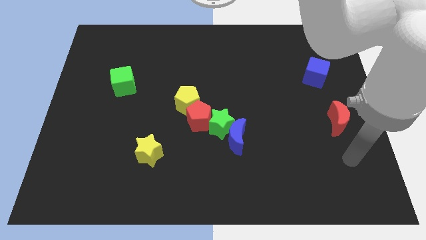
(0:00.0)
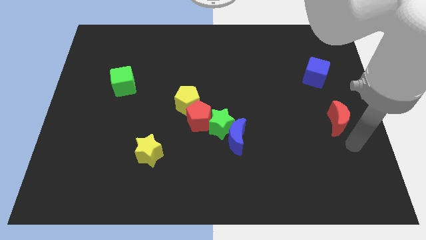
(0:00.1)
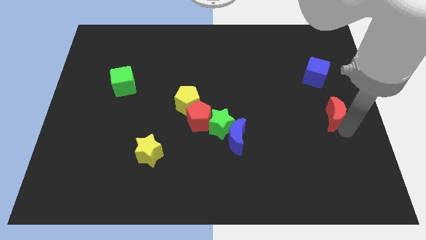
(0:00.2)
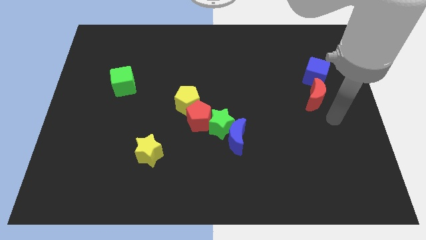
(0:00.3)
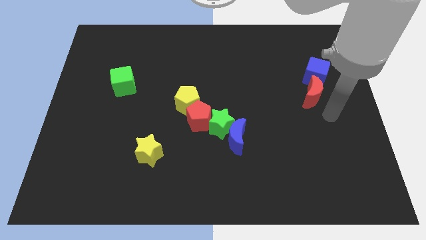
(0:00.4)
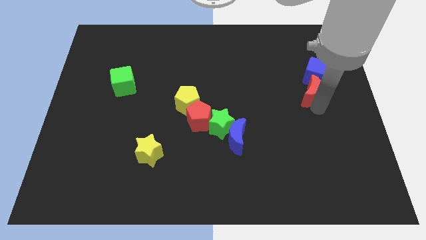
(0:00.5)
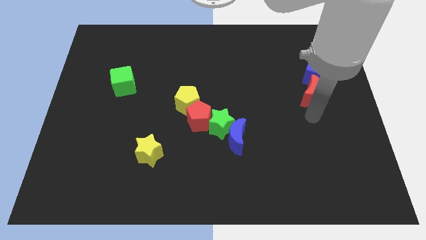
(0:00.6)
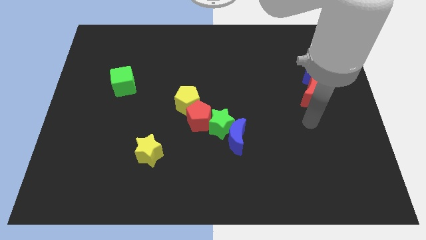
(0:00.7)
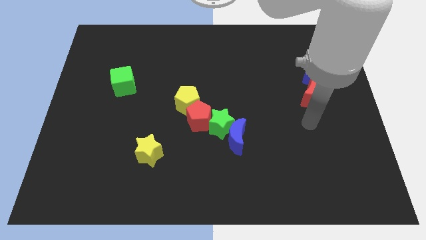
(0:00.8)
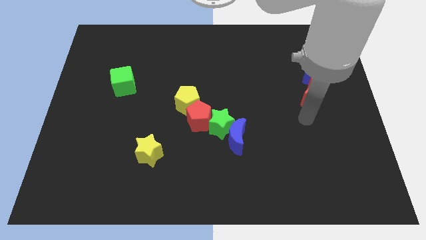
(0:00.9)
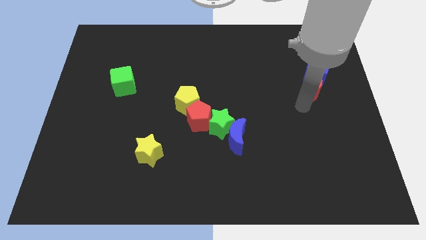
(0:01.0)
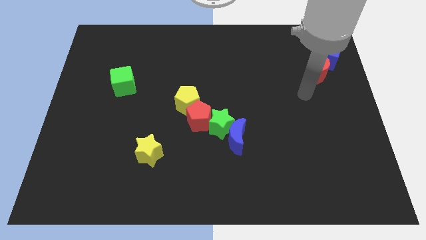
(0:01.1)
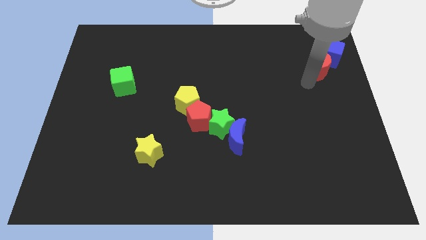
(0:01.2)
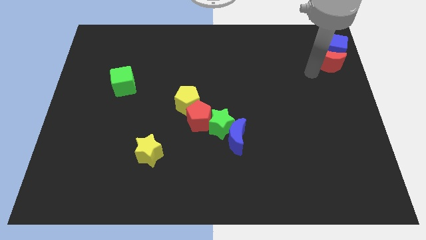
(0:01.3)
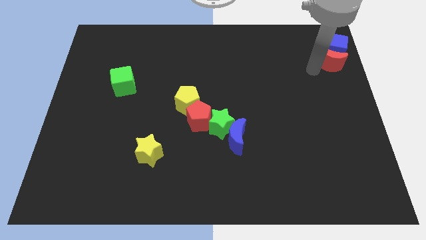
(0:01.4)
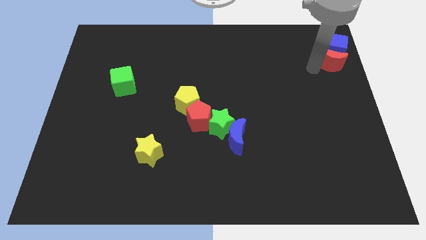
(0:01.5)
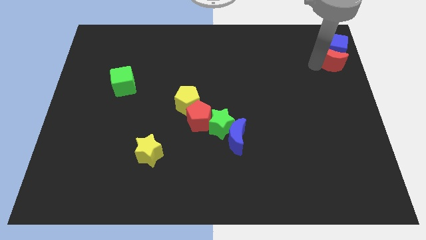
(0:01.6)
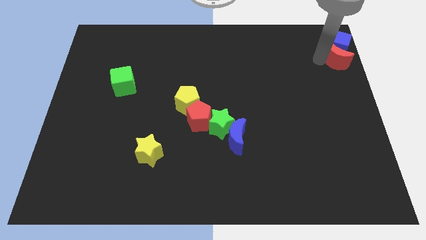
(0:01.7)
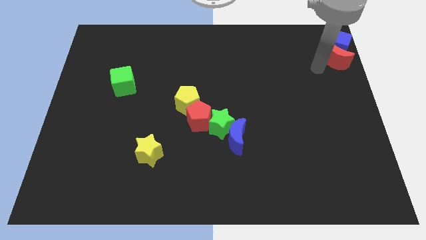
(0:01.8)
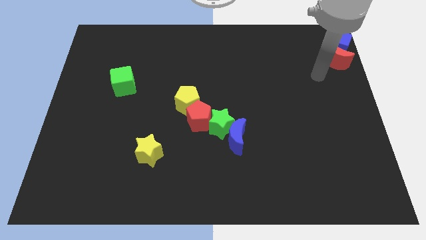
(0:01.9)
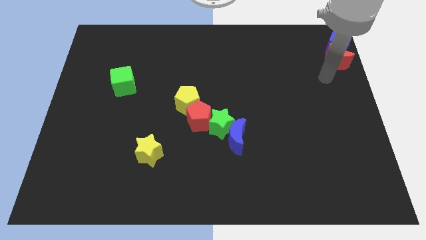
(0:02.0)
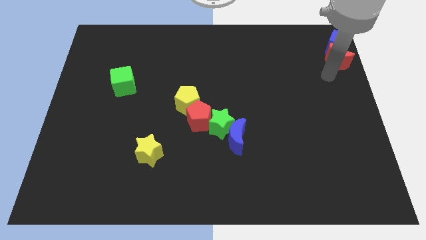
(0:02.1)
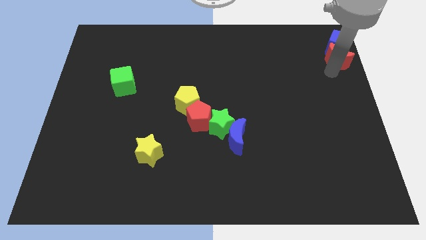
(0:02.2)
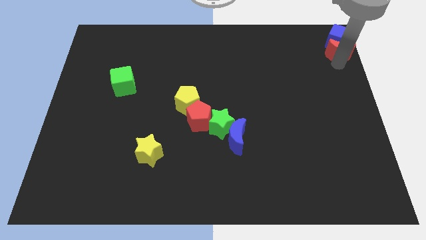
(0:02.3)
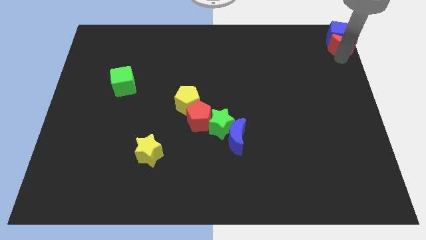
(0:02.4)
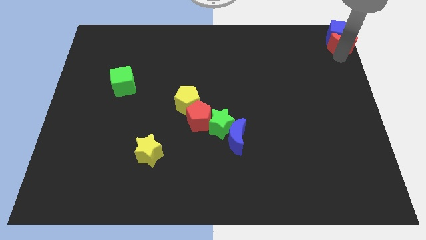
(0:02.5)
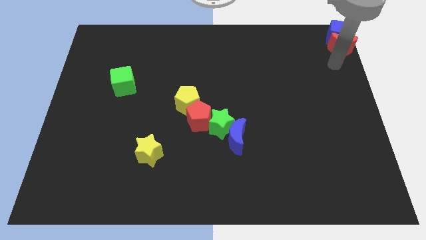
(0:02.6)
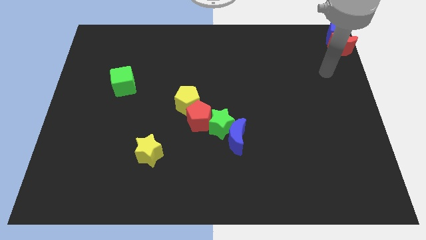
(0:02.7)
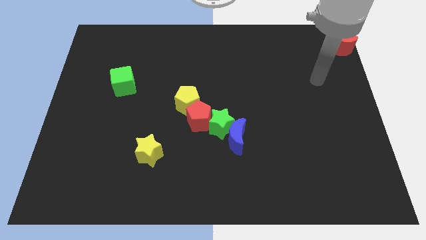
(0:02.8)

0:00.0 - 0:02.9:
move the red crescent along with the blue cube to the top right corner of the board

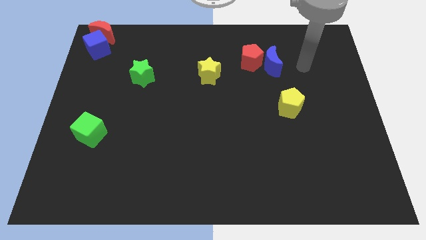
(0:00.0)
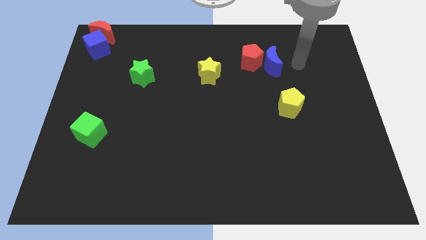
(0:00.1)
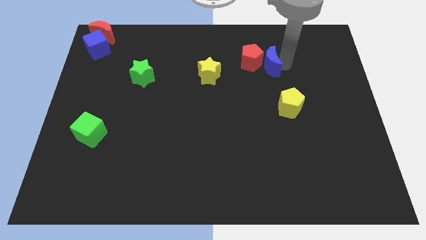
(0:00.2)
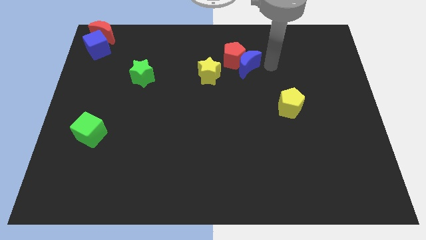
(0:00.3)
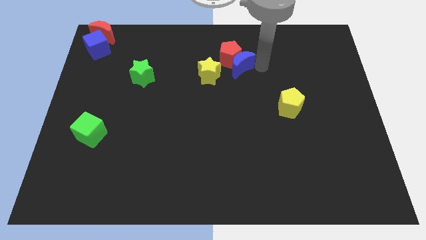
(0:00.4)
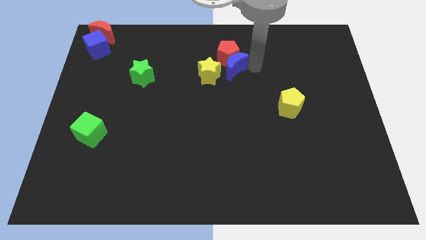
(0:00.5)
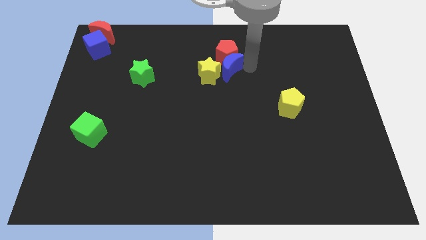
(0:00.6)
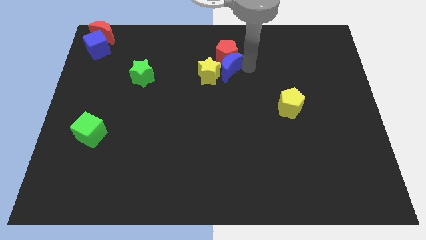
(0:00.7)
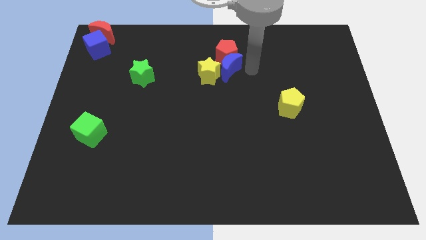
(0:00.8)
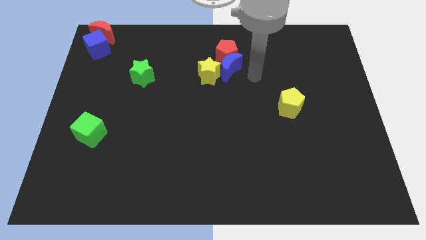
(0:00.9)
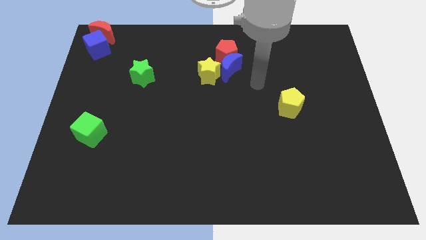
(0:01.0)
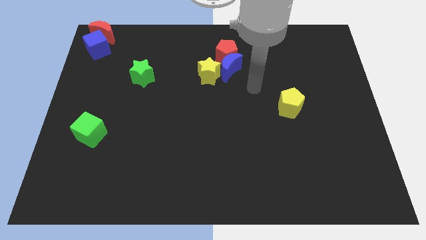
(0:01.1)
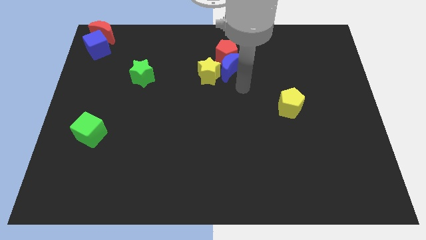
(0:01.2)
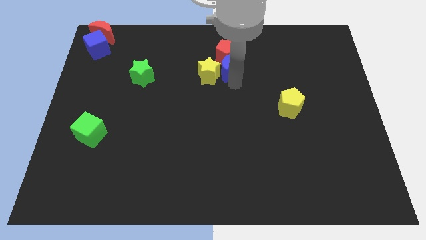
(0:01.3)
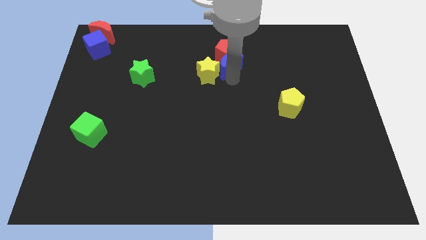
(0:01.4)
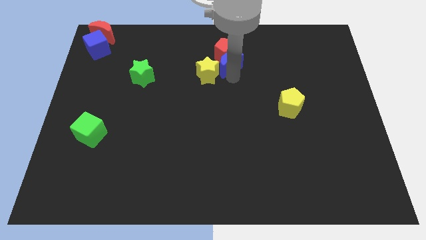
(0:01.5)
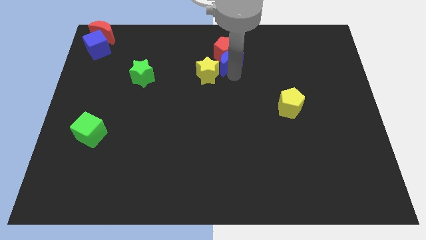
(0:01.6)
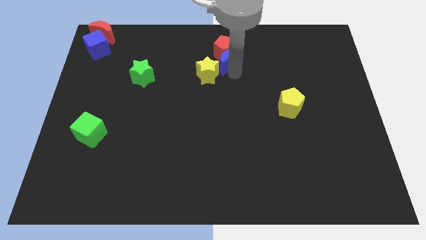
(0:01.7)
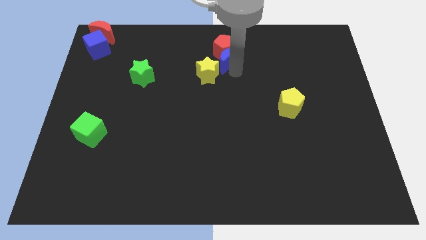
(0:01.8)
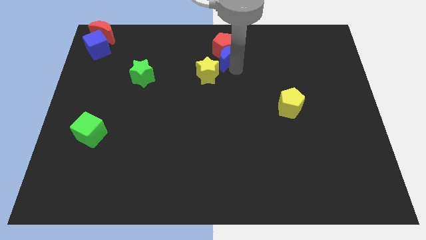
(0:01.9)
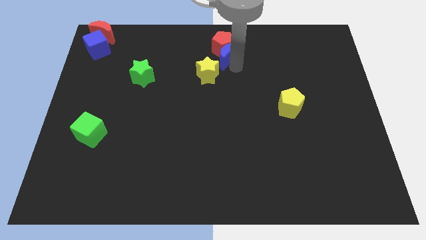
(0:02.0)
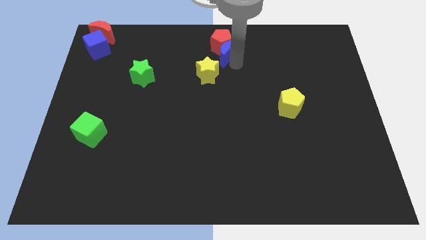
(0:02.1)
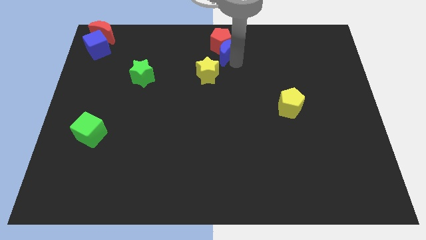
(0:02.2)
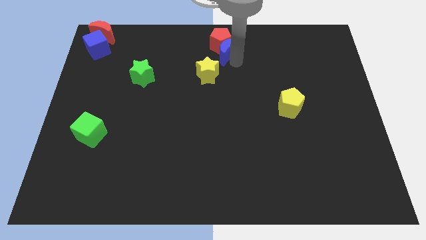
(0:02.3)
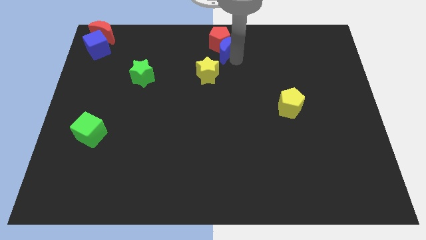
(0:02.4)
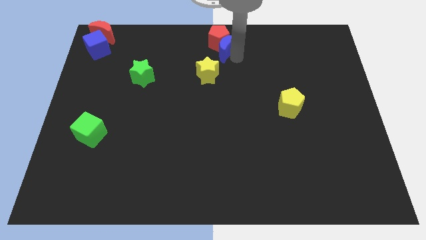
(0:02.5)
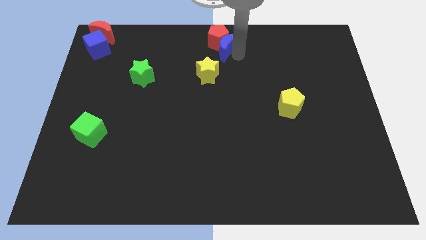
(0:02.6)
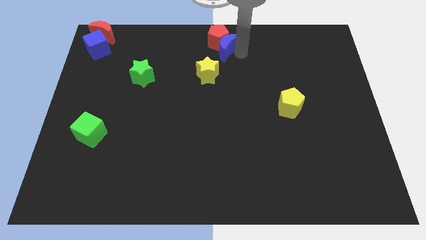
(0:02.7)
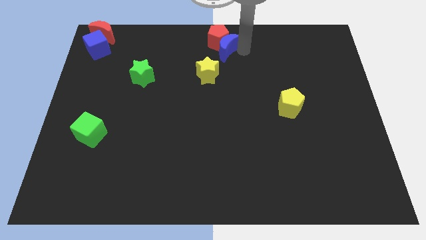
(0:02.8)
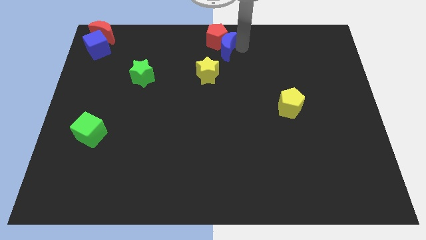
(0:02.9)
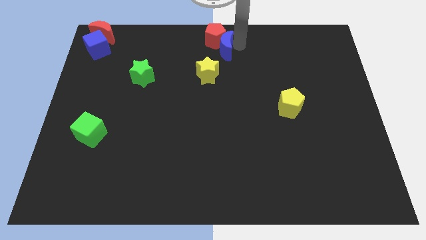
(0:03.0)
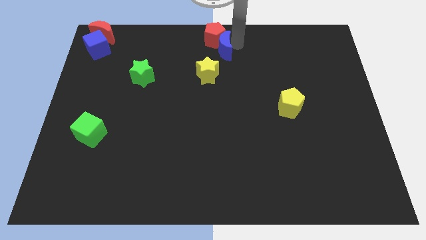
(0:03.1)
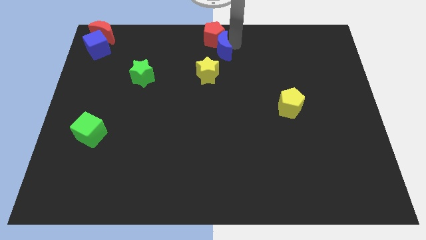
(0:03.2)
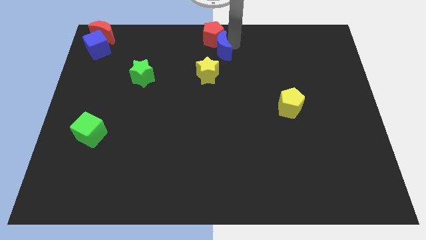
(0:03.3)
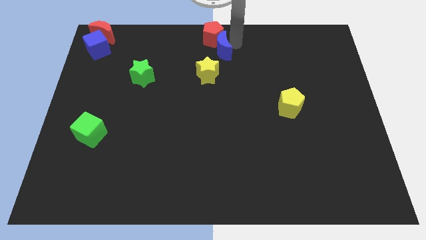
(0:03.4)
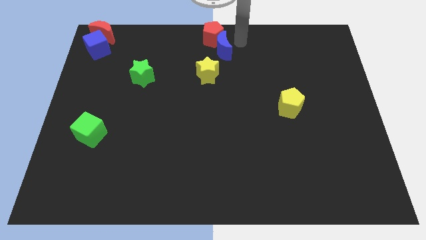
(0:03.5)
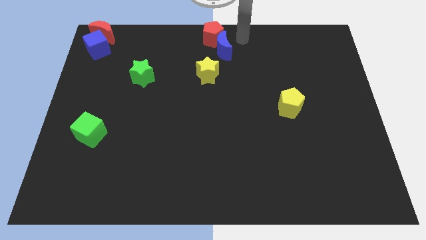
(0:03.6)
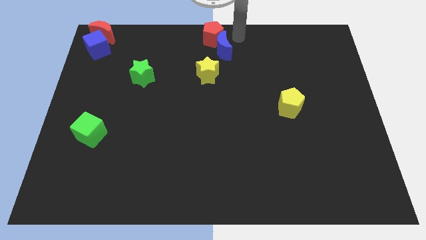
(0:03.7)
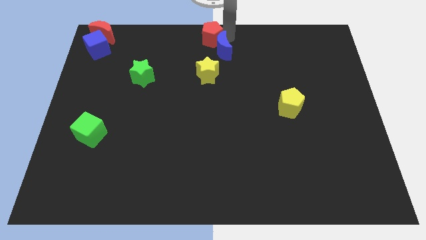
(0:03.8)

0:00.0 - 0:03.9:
move the blue moon and the red pentagon to the top center of the board

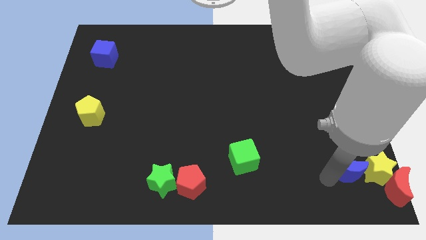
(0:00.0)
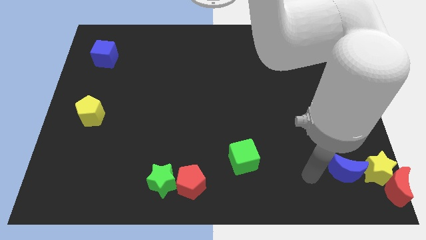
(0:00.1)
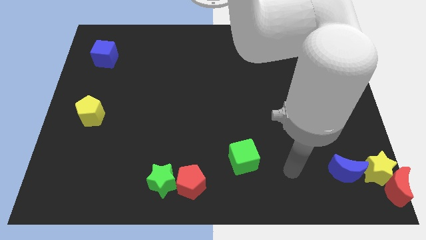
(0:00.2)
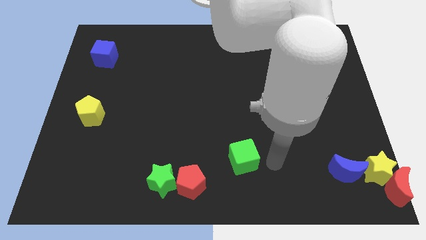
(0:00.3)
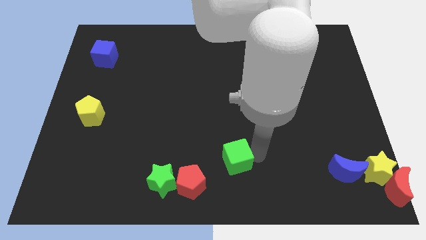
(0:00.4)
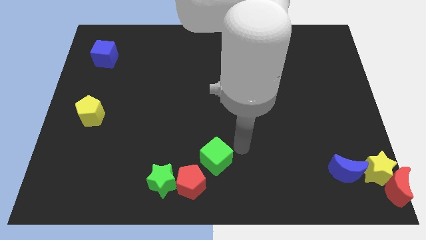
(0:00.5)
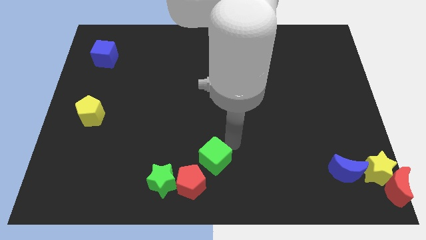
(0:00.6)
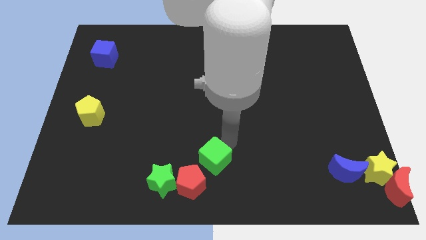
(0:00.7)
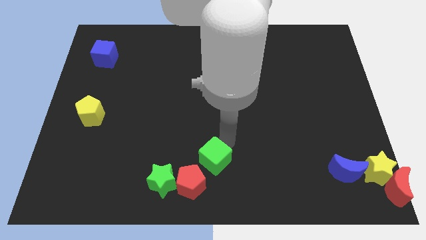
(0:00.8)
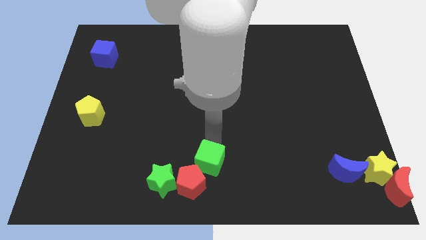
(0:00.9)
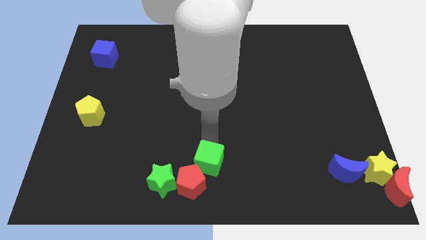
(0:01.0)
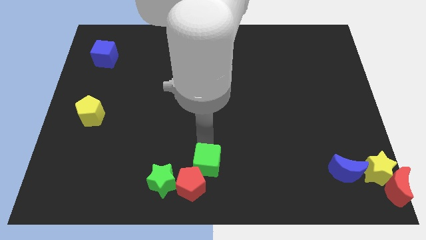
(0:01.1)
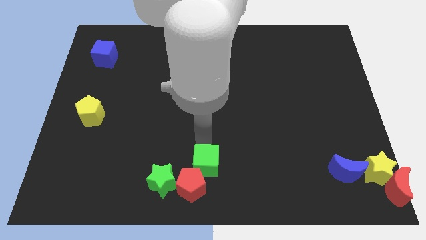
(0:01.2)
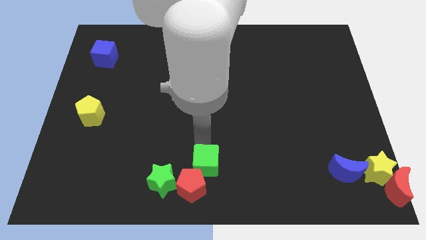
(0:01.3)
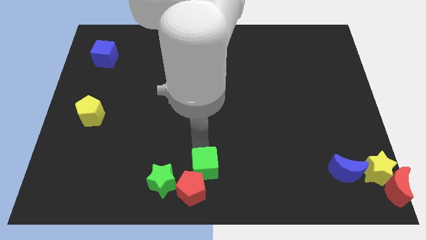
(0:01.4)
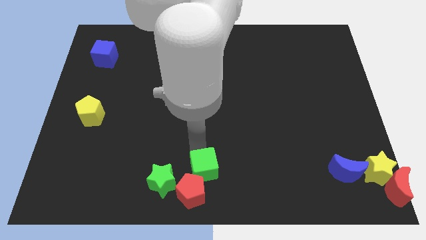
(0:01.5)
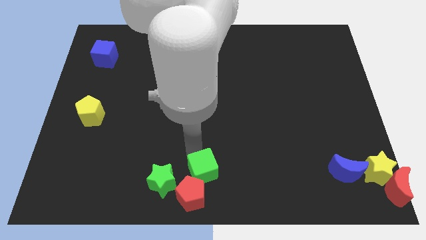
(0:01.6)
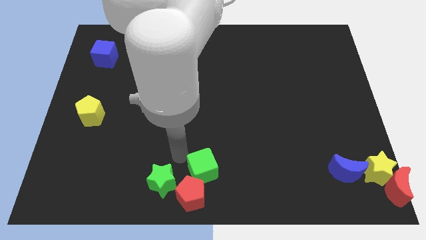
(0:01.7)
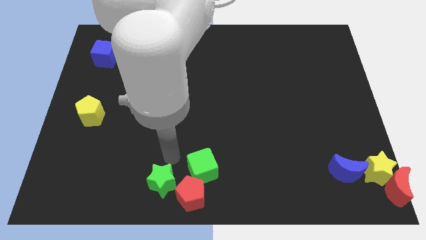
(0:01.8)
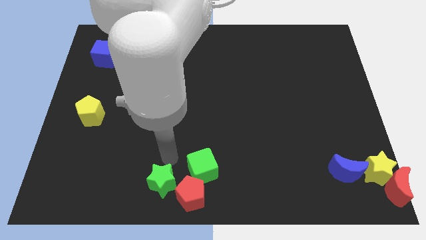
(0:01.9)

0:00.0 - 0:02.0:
push the green cube above the red pentagon at the bottom

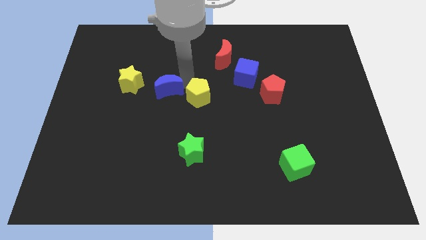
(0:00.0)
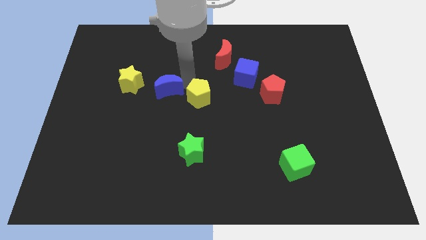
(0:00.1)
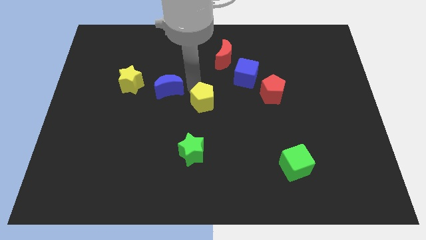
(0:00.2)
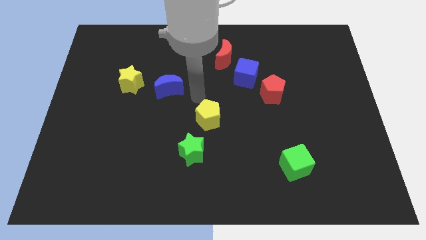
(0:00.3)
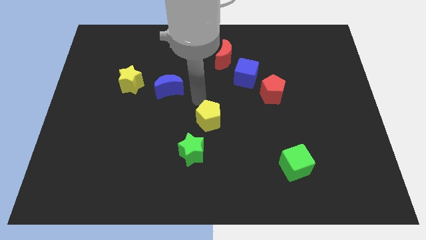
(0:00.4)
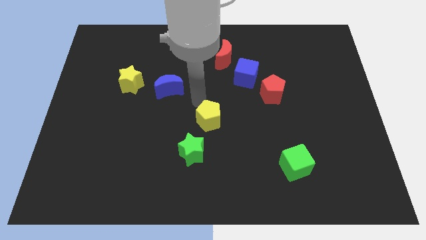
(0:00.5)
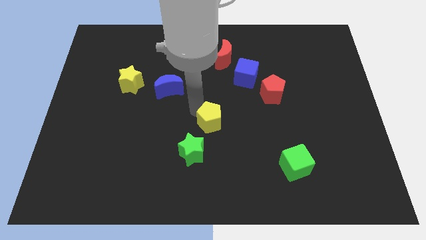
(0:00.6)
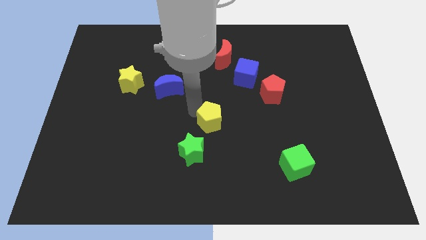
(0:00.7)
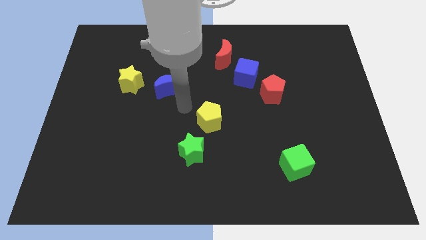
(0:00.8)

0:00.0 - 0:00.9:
push the yellow pentagon towards the top right of the green star
